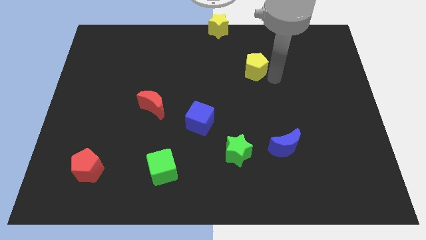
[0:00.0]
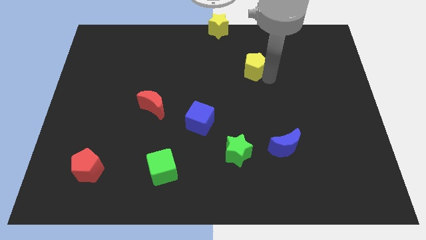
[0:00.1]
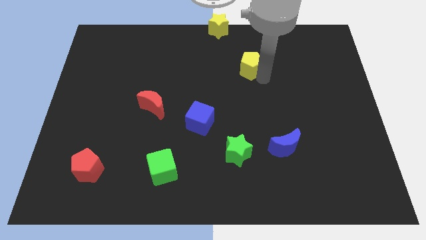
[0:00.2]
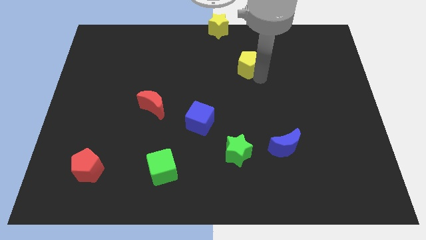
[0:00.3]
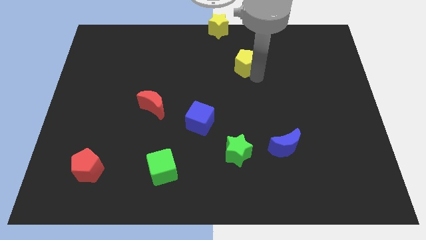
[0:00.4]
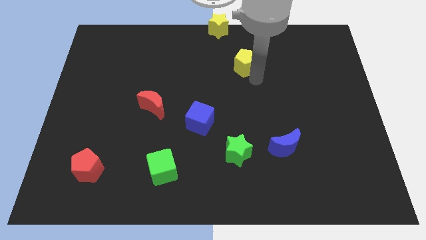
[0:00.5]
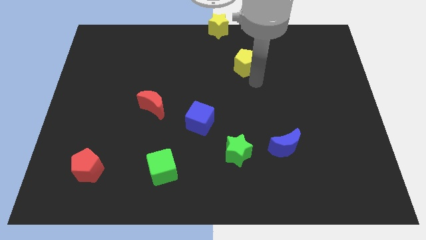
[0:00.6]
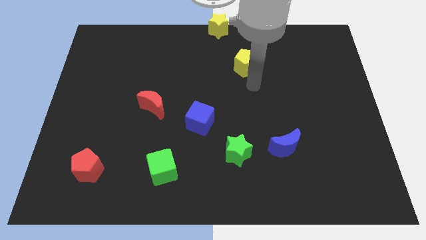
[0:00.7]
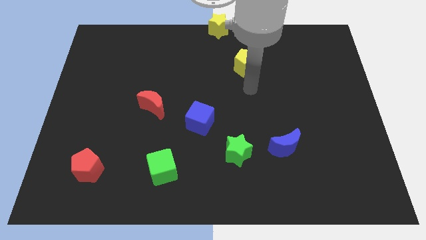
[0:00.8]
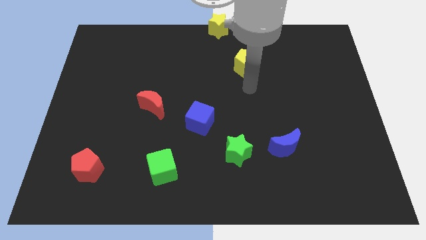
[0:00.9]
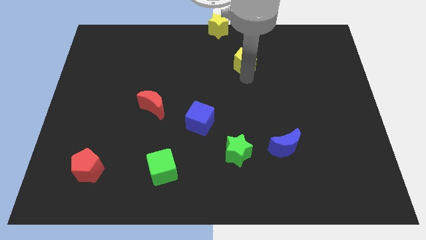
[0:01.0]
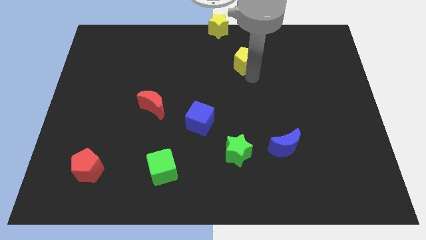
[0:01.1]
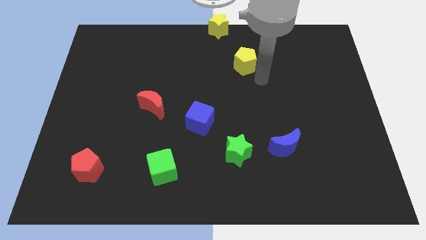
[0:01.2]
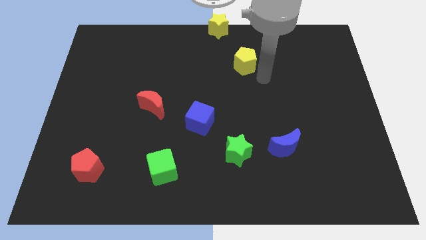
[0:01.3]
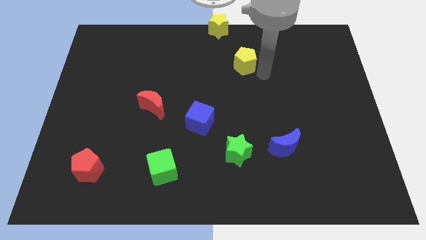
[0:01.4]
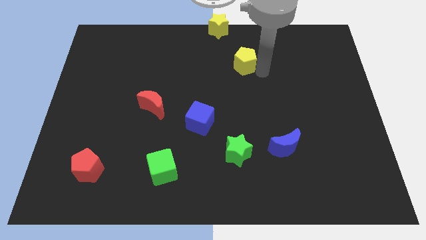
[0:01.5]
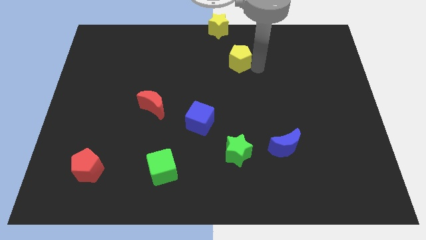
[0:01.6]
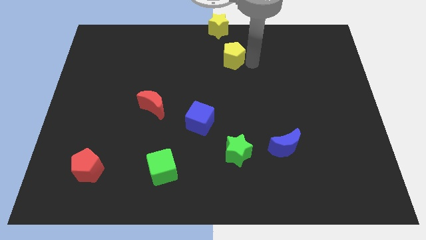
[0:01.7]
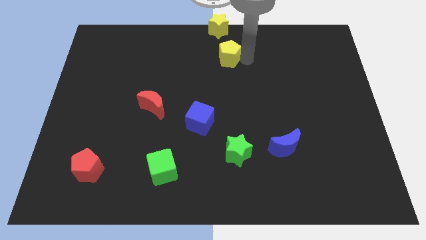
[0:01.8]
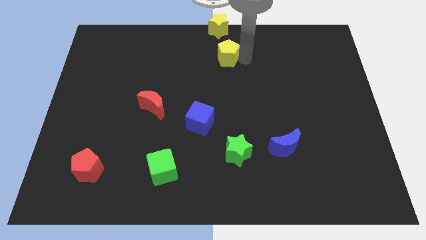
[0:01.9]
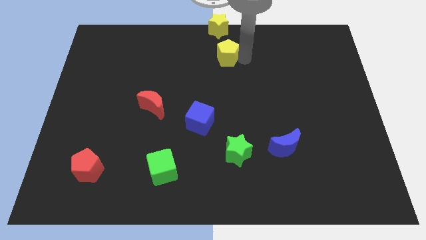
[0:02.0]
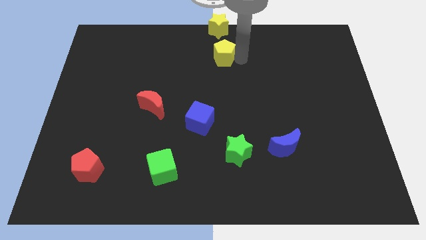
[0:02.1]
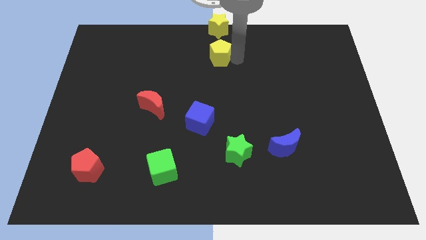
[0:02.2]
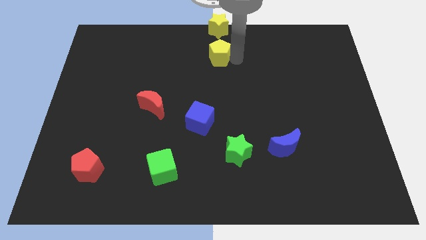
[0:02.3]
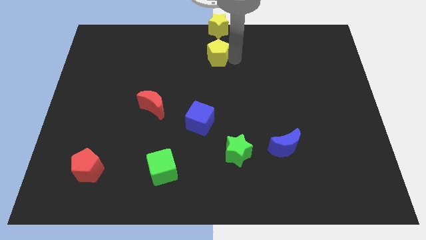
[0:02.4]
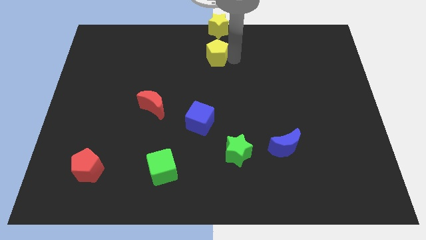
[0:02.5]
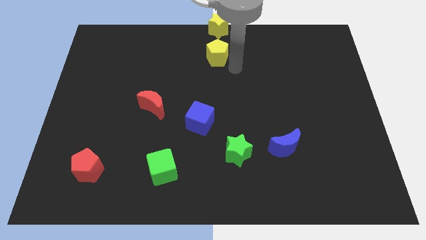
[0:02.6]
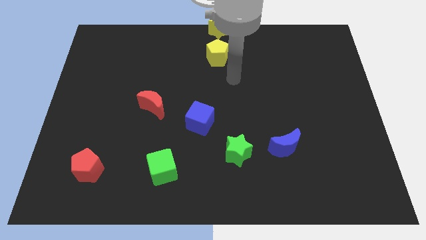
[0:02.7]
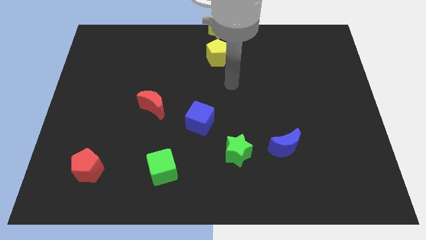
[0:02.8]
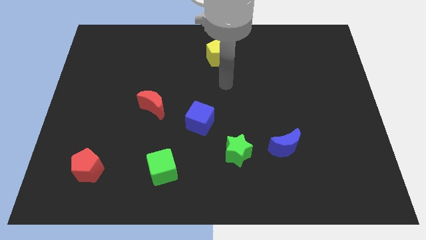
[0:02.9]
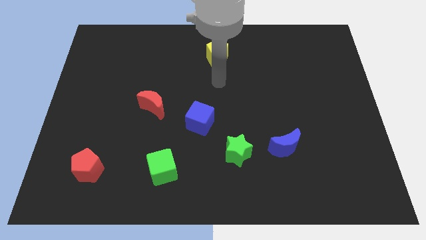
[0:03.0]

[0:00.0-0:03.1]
place the yellow pentagon vertically above the blue cube

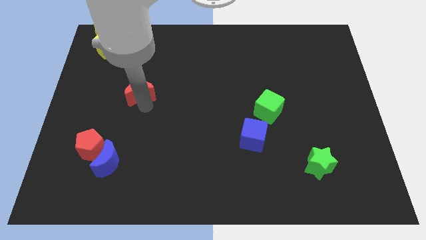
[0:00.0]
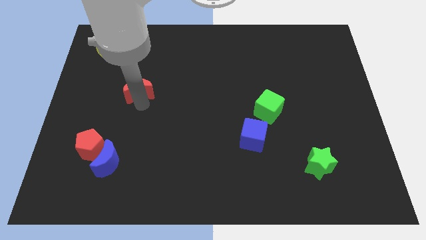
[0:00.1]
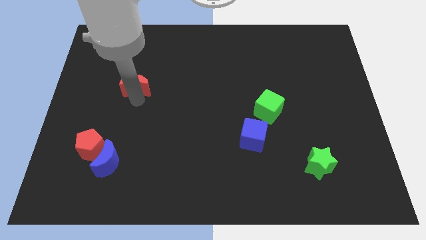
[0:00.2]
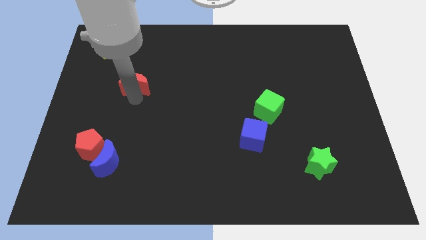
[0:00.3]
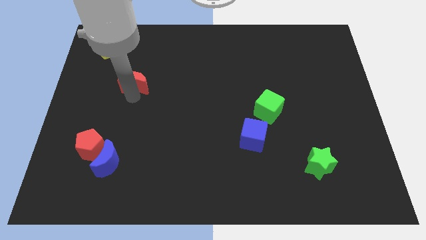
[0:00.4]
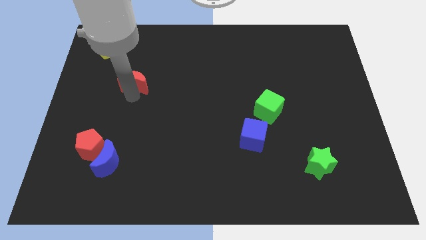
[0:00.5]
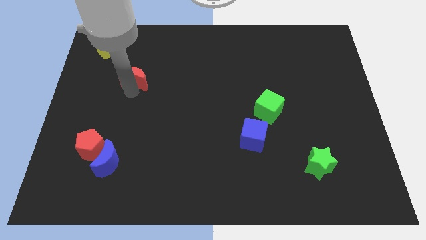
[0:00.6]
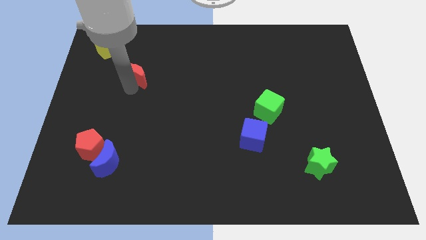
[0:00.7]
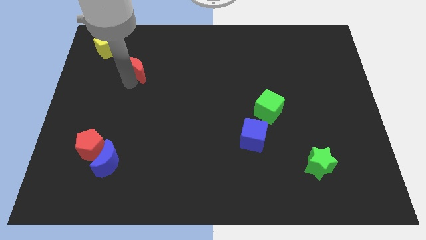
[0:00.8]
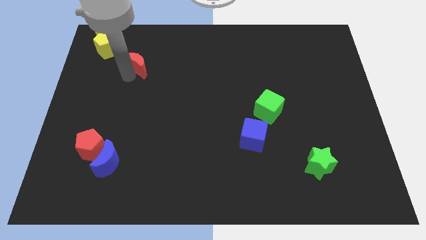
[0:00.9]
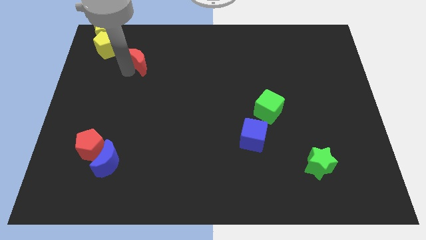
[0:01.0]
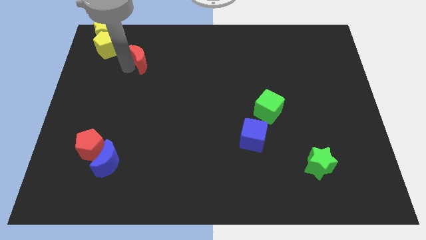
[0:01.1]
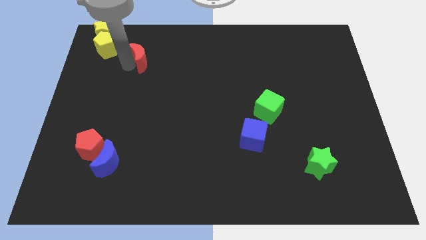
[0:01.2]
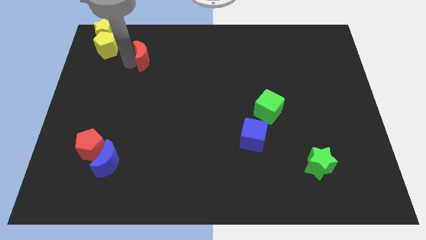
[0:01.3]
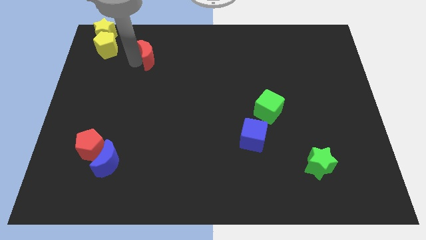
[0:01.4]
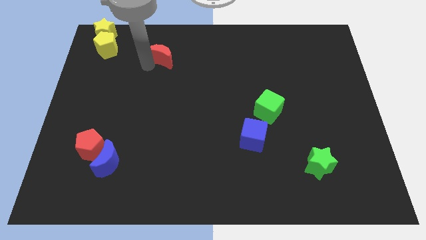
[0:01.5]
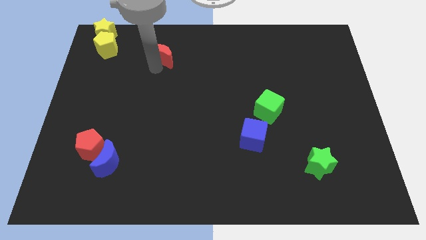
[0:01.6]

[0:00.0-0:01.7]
move the red crescent up slightly

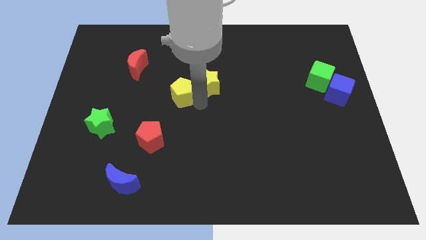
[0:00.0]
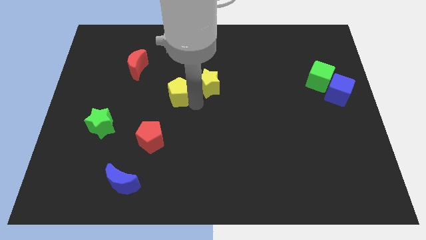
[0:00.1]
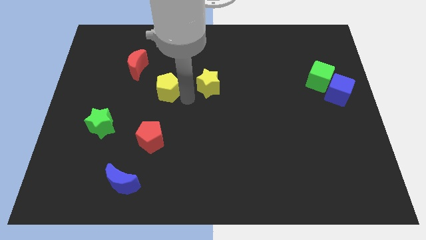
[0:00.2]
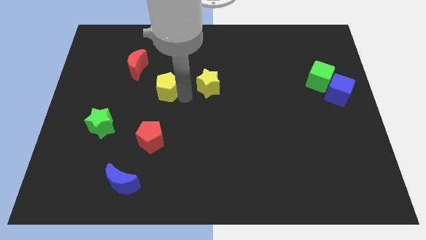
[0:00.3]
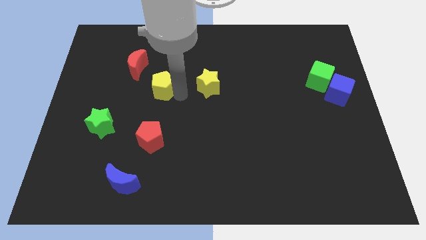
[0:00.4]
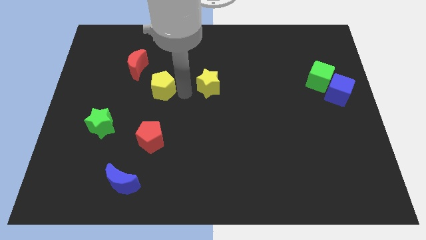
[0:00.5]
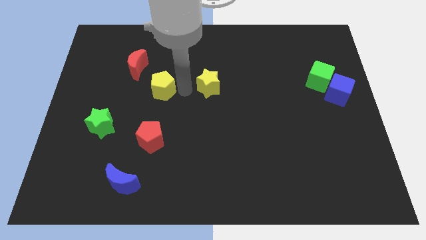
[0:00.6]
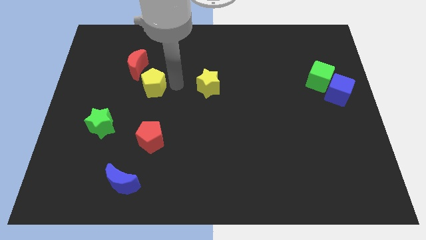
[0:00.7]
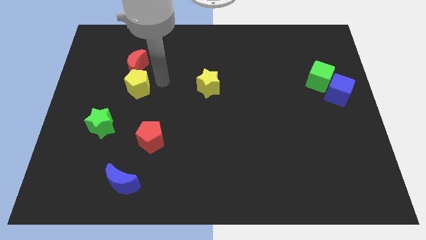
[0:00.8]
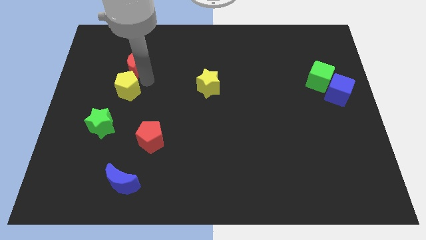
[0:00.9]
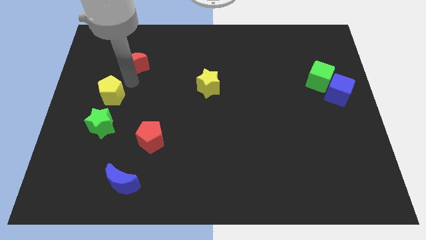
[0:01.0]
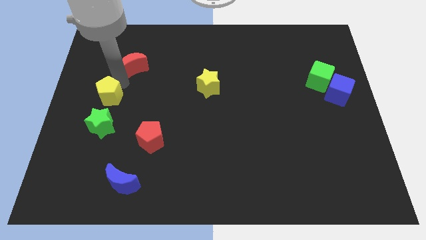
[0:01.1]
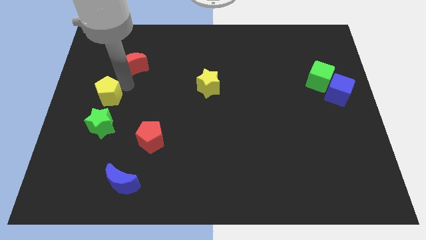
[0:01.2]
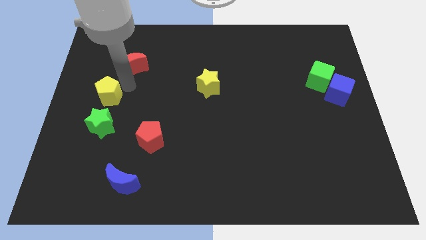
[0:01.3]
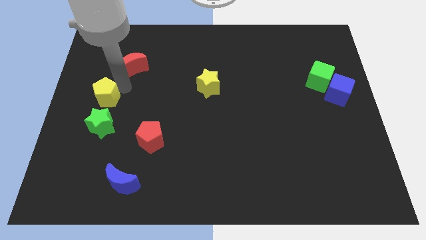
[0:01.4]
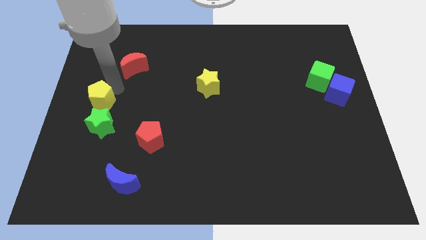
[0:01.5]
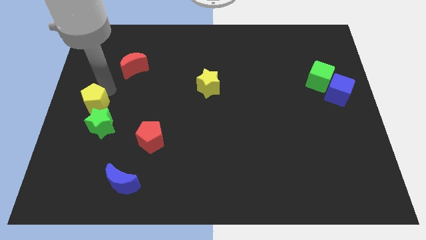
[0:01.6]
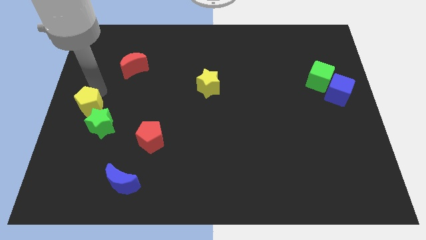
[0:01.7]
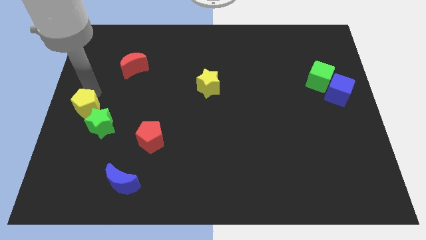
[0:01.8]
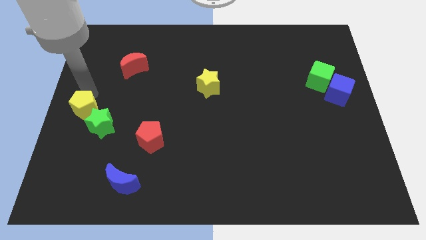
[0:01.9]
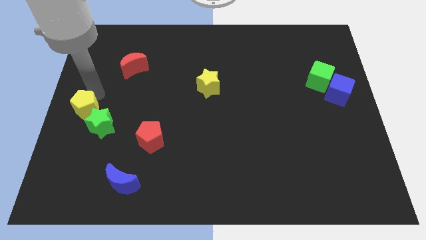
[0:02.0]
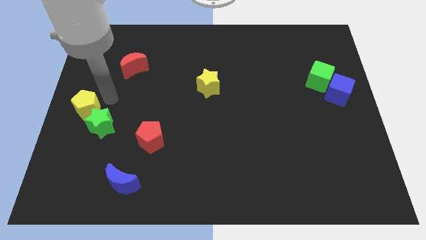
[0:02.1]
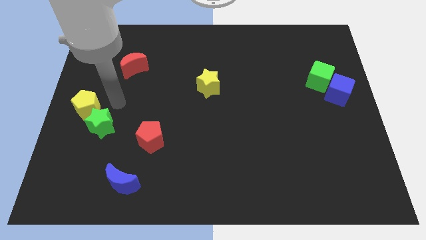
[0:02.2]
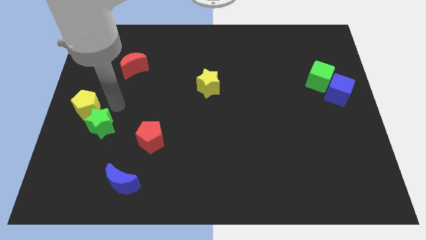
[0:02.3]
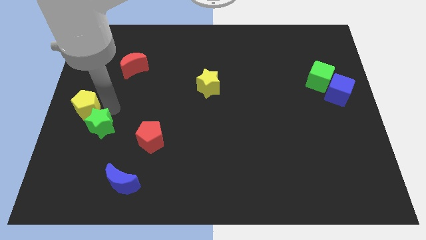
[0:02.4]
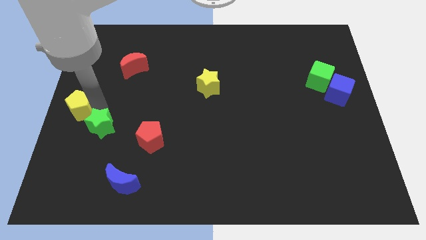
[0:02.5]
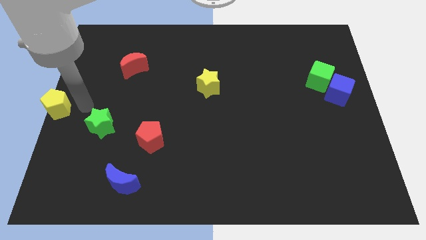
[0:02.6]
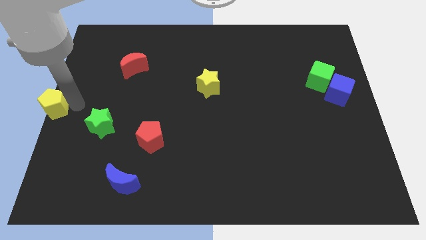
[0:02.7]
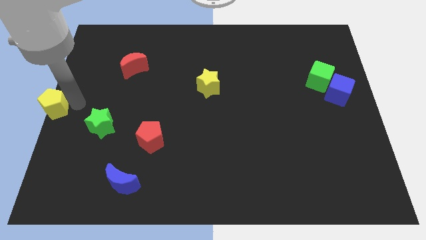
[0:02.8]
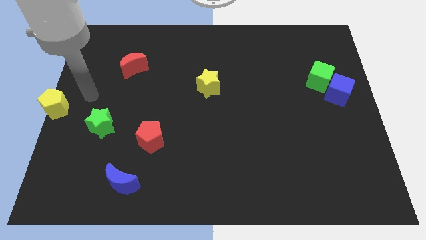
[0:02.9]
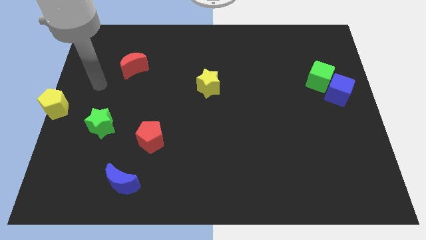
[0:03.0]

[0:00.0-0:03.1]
move the yellow pentagon at the center left of the table

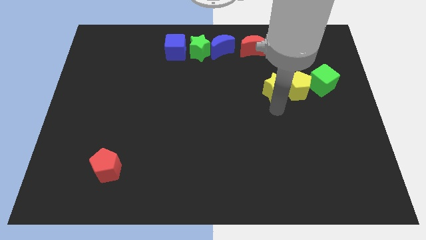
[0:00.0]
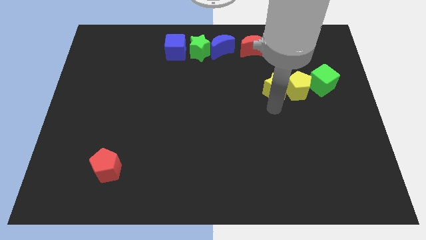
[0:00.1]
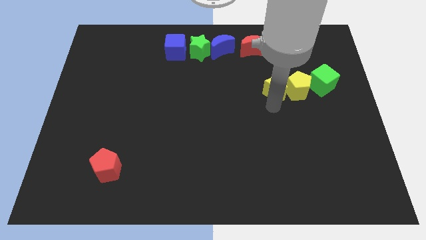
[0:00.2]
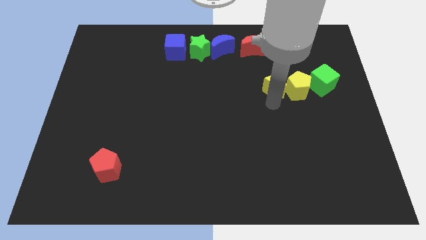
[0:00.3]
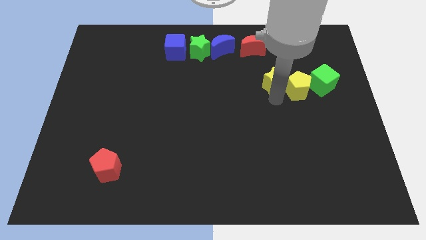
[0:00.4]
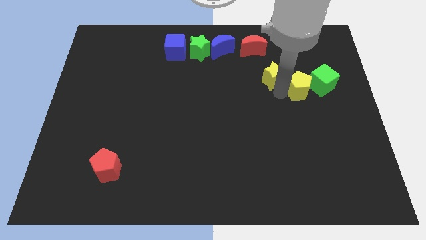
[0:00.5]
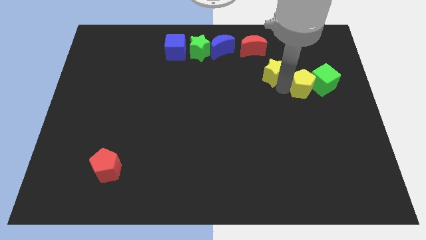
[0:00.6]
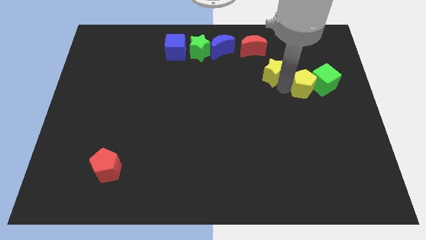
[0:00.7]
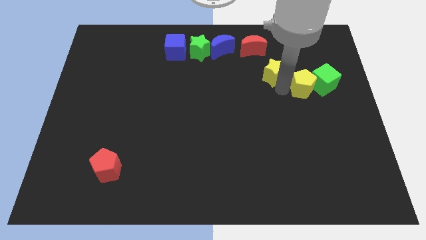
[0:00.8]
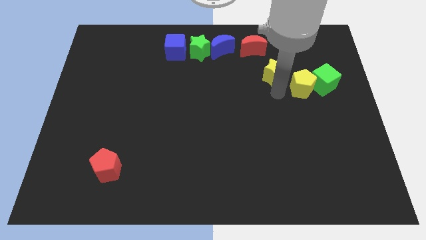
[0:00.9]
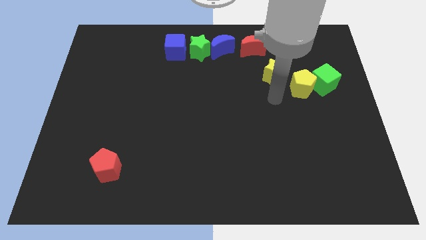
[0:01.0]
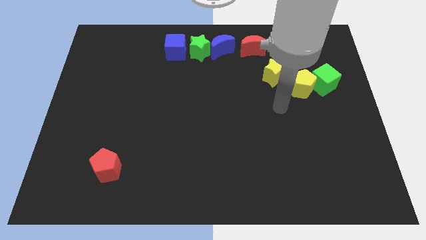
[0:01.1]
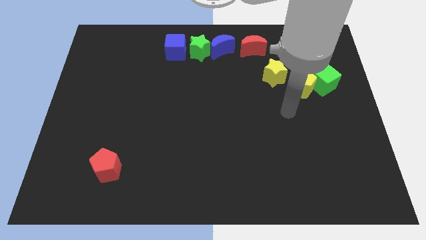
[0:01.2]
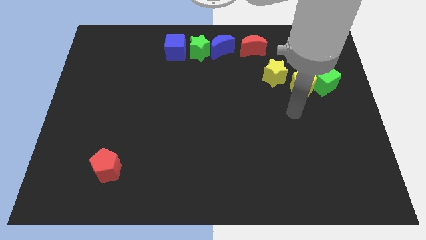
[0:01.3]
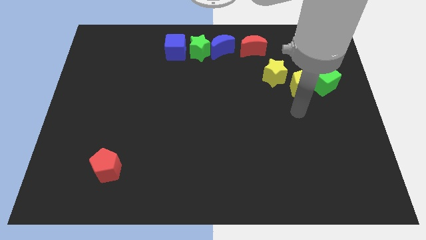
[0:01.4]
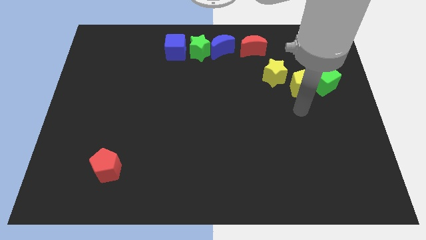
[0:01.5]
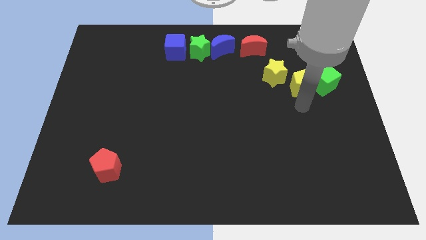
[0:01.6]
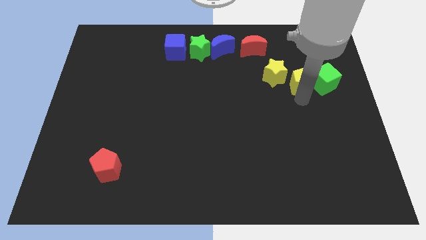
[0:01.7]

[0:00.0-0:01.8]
slightly move the yellow star and yellow pentagon towards top
